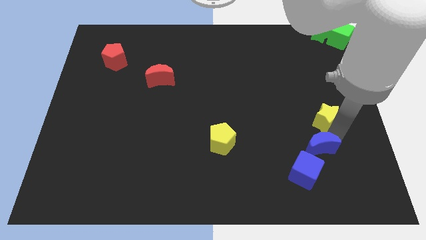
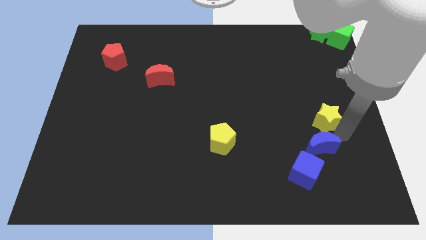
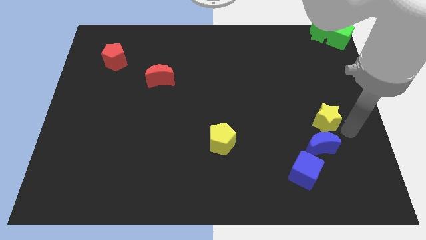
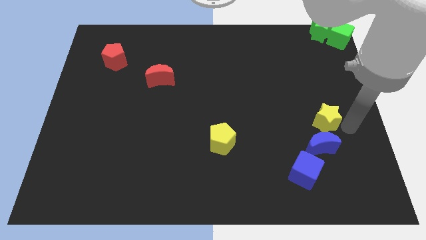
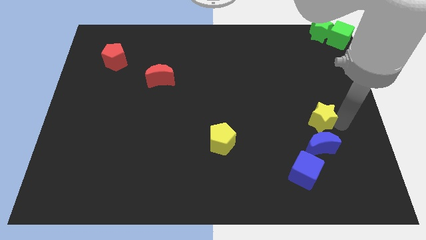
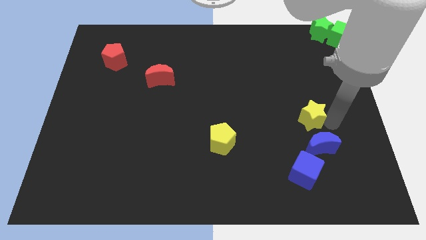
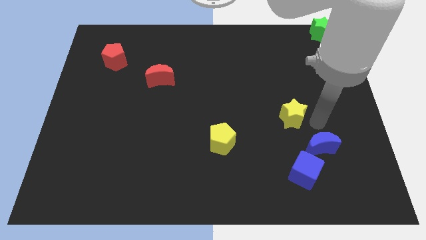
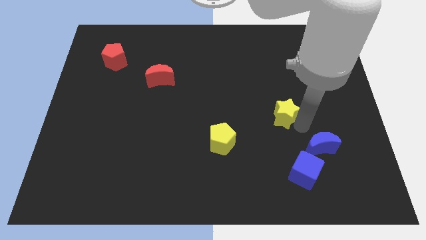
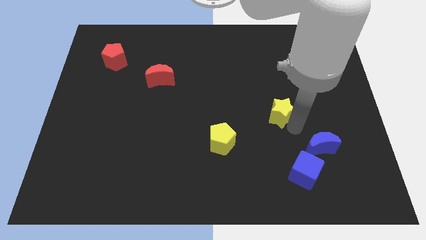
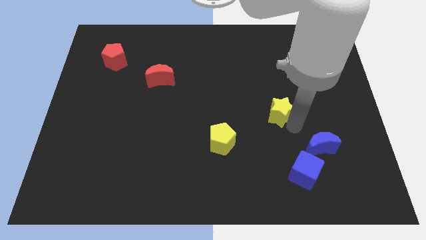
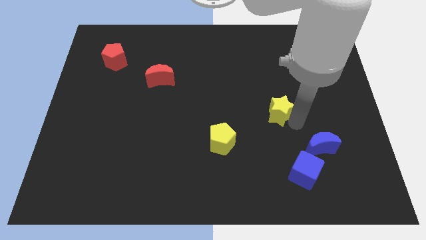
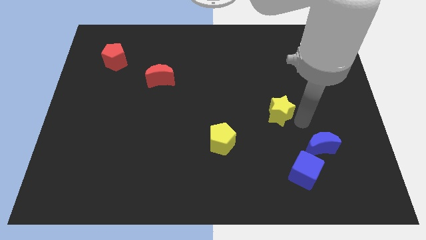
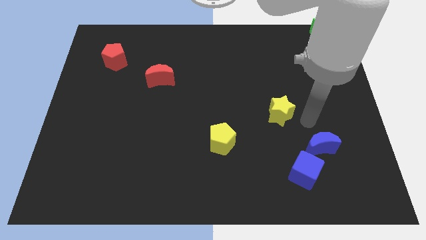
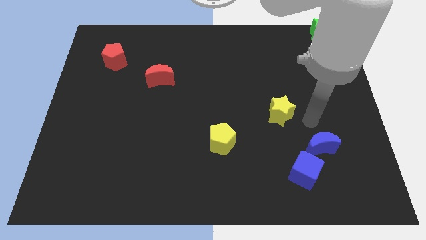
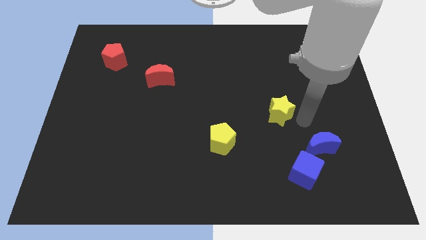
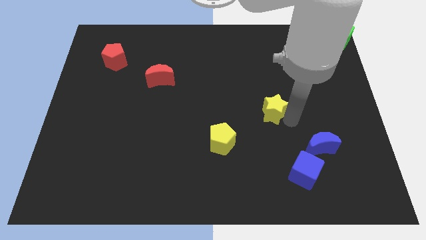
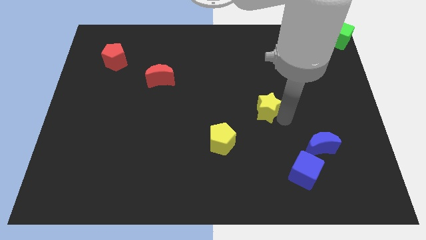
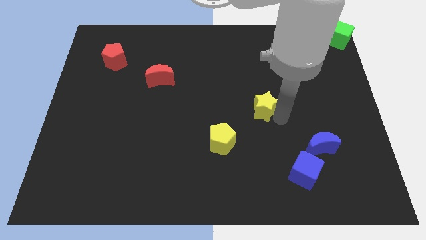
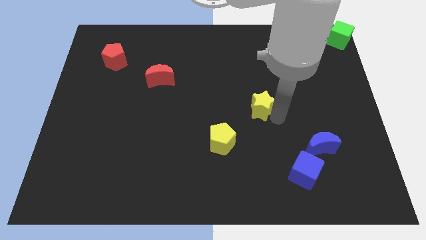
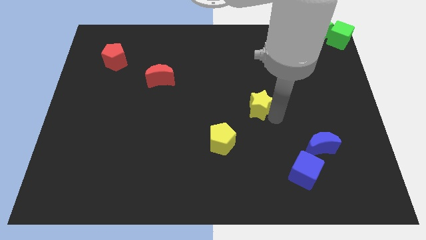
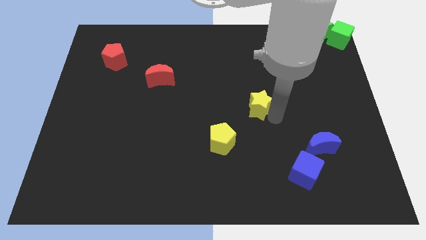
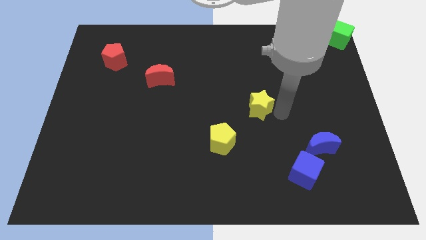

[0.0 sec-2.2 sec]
place the yellow star diagonally top right to the yellow pentagon

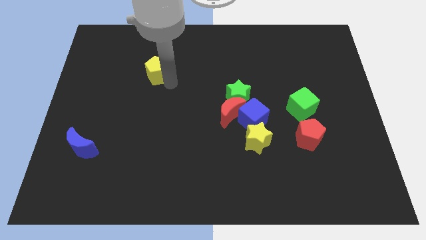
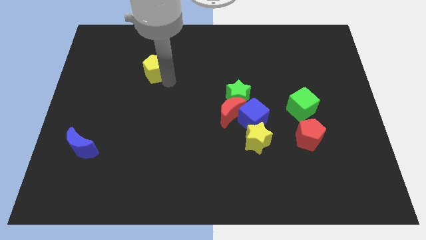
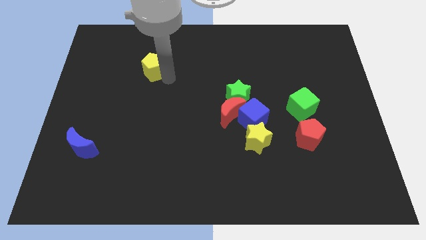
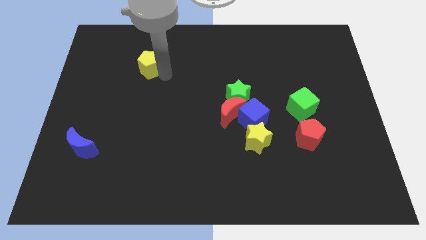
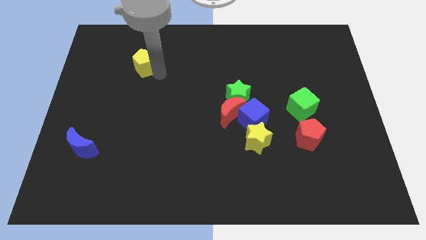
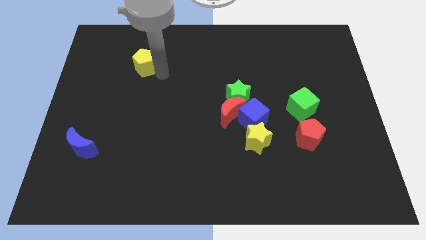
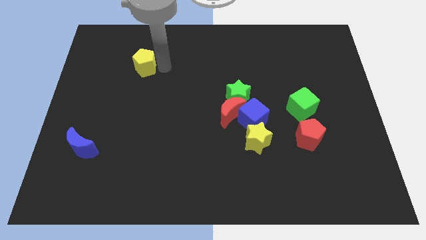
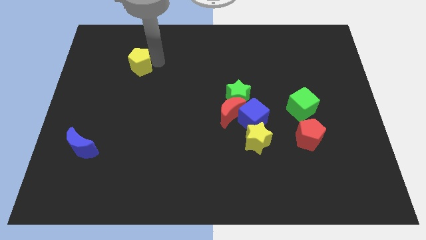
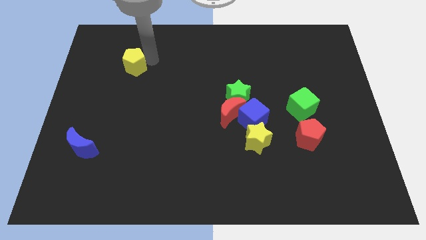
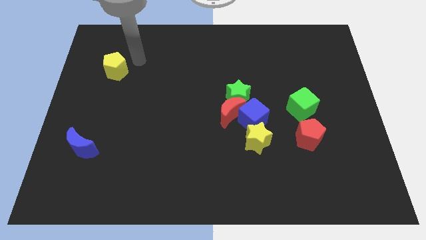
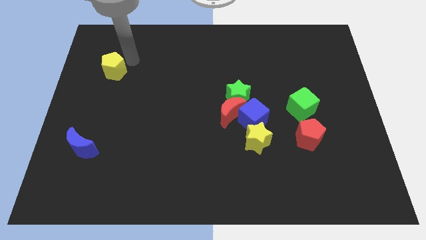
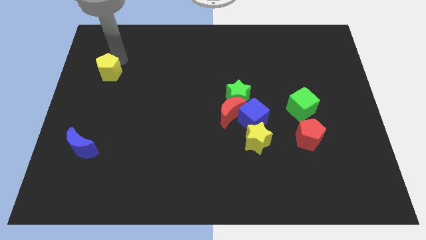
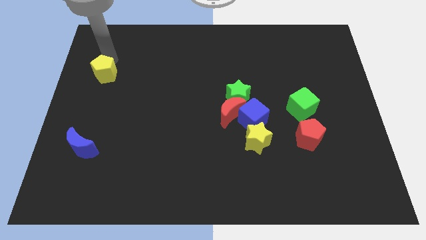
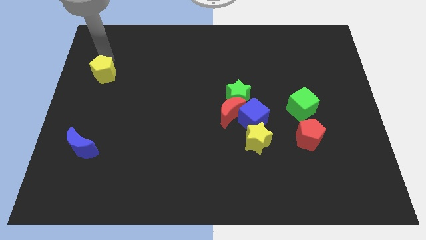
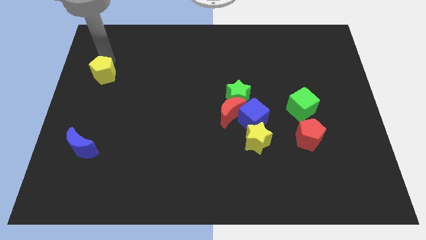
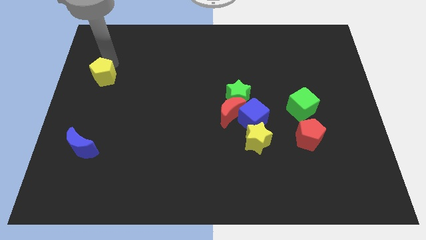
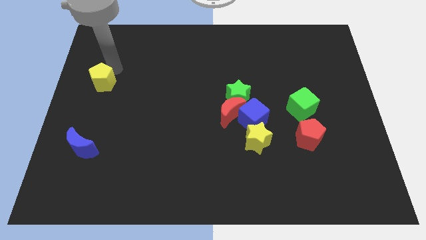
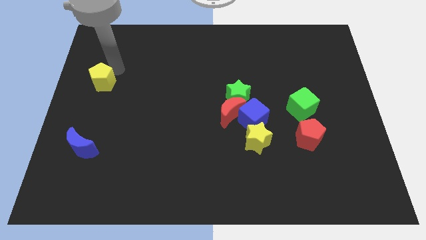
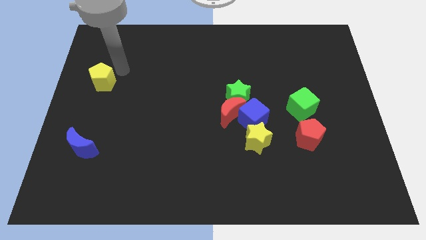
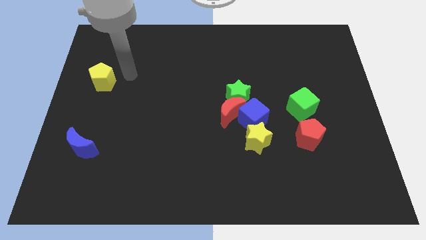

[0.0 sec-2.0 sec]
drag the yellow pentagon to the left side of the board

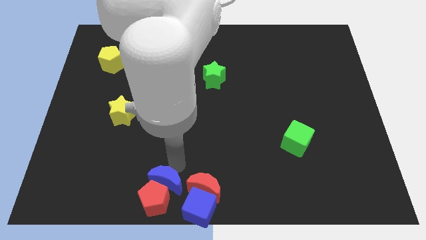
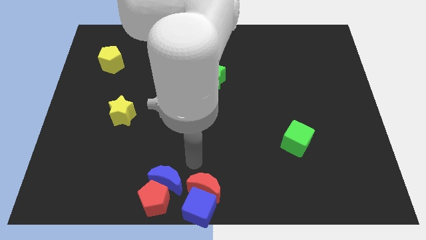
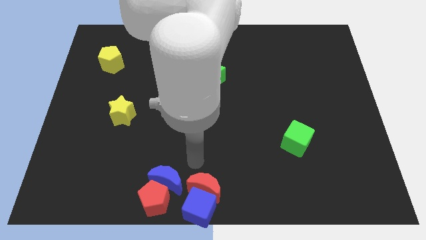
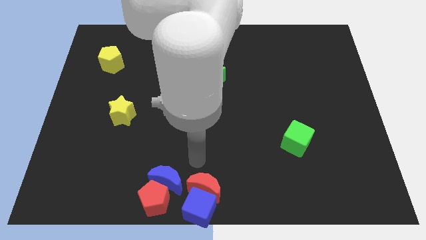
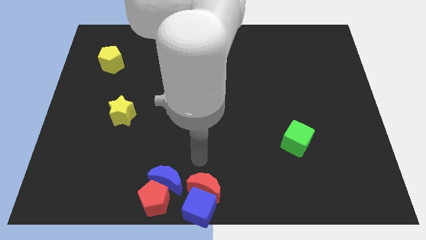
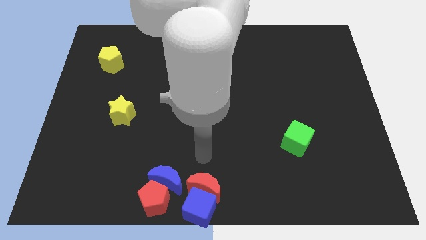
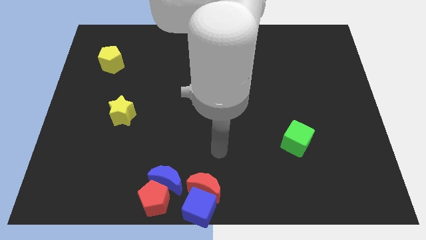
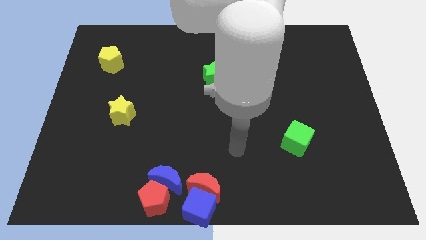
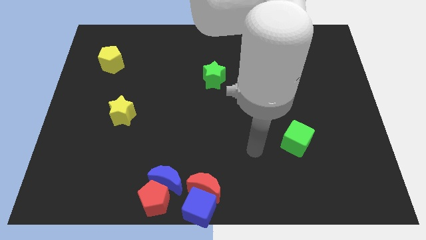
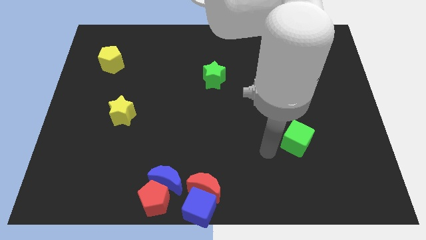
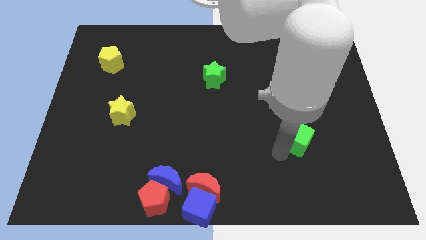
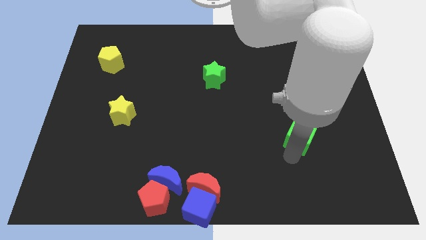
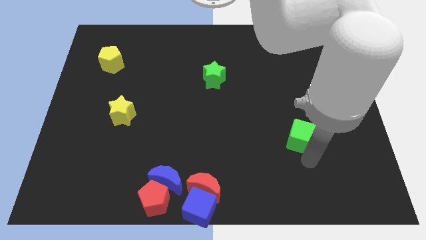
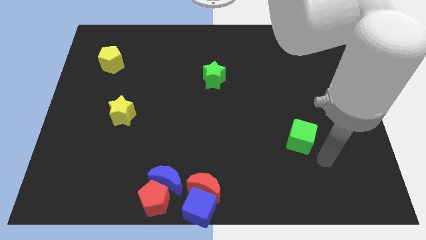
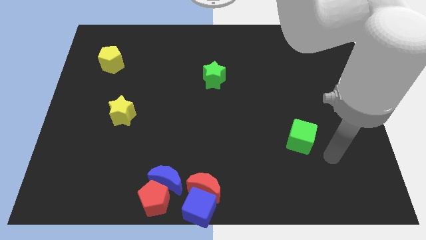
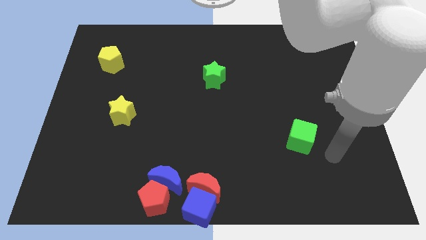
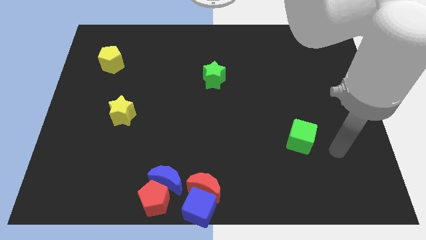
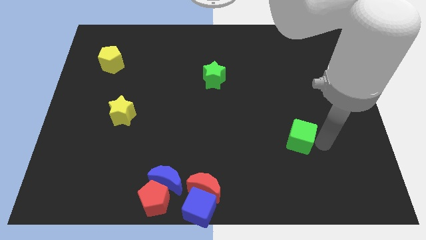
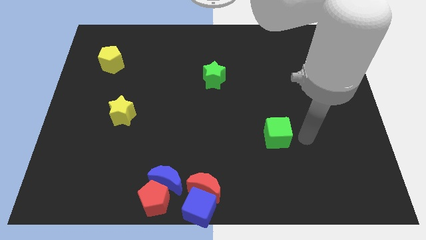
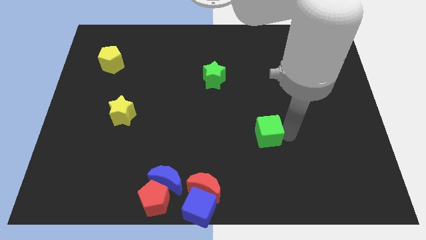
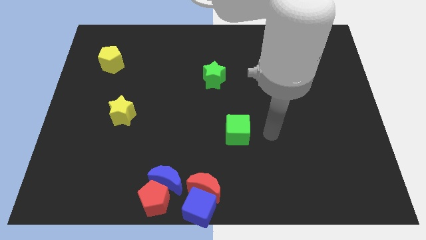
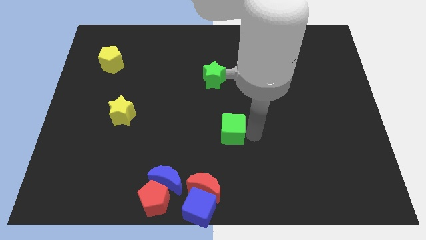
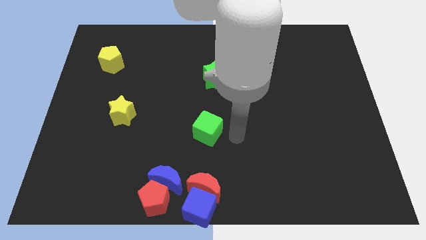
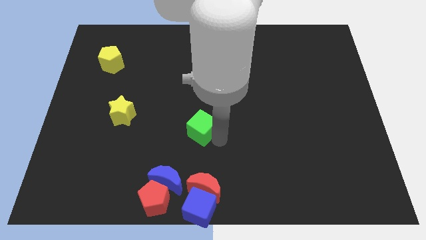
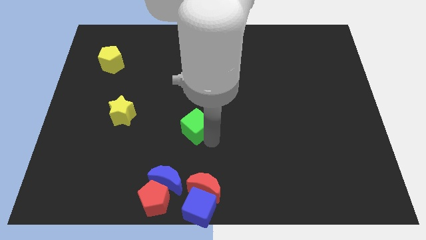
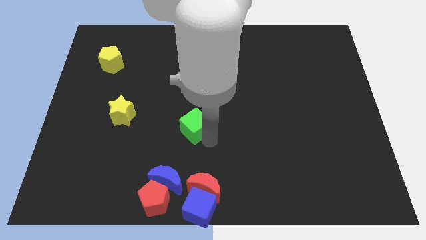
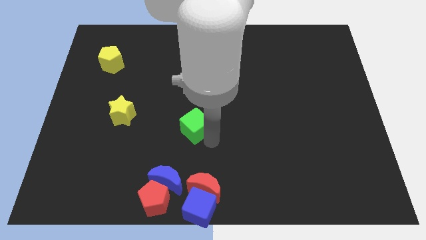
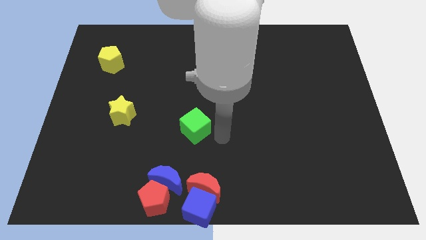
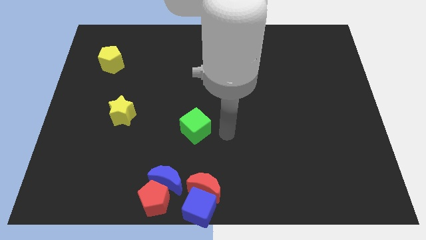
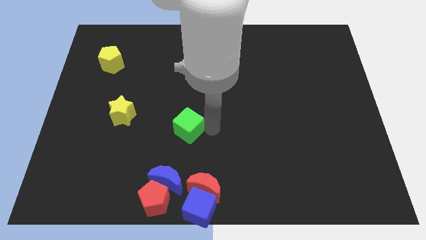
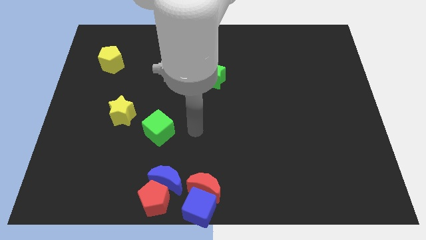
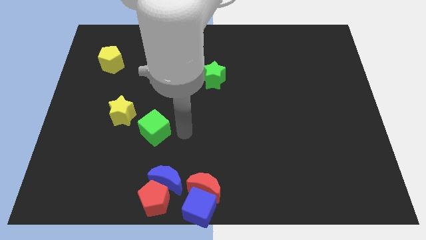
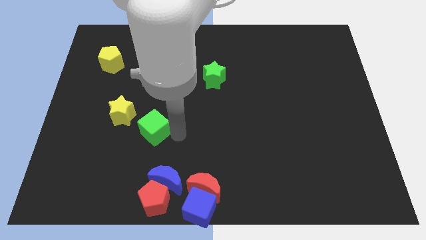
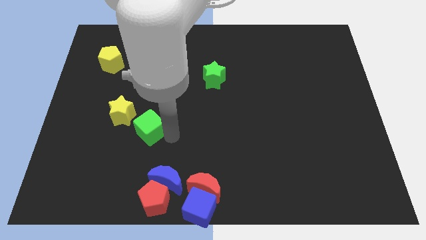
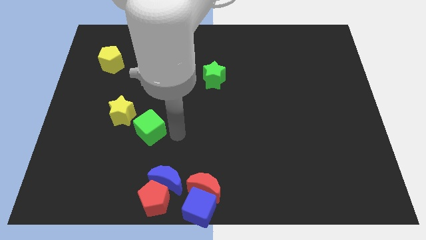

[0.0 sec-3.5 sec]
move the green cube near the yellow star

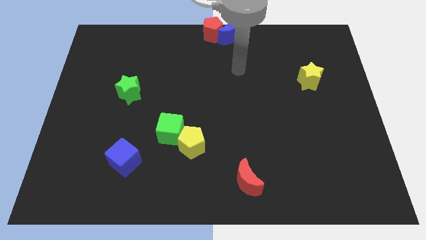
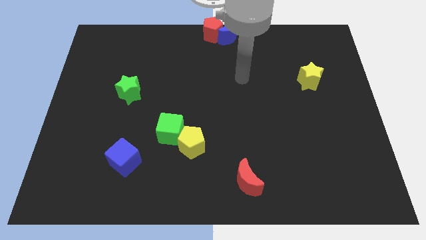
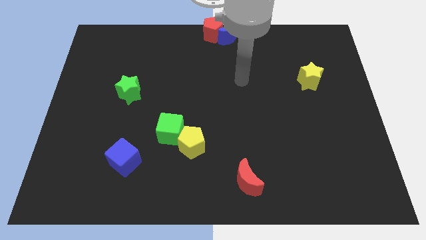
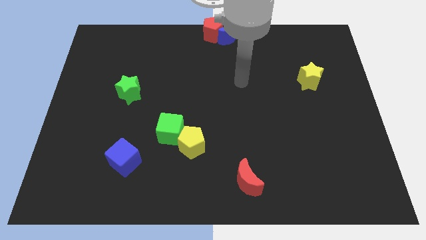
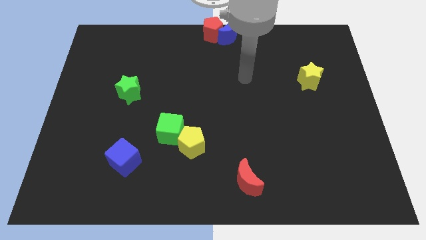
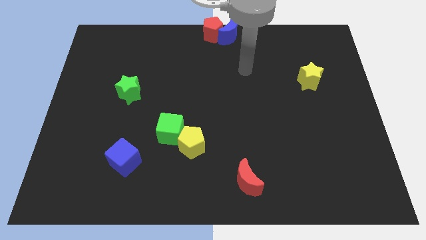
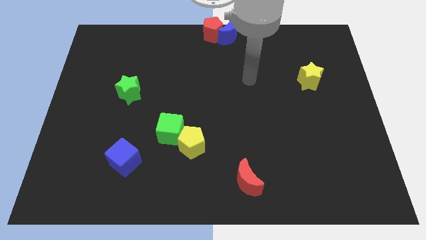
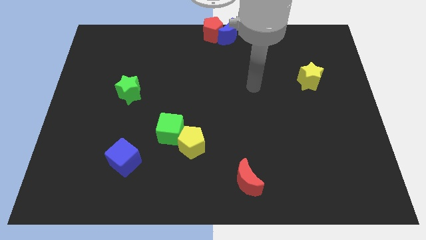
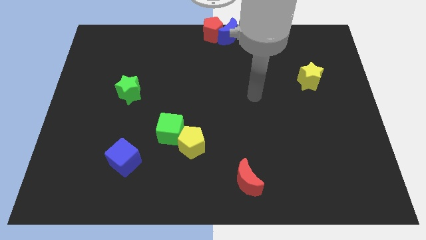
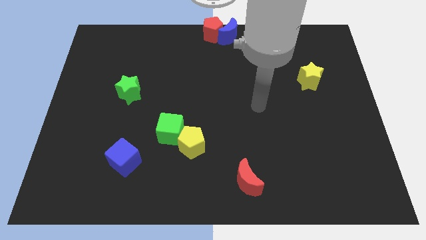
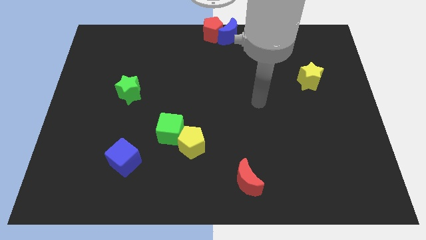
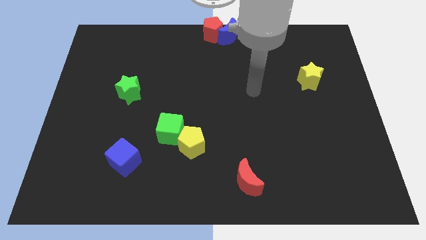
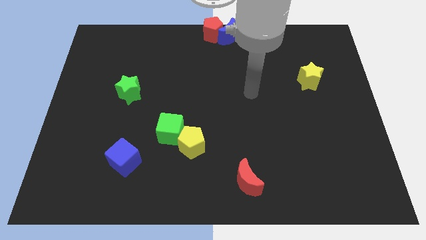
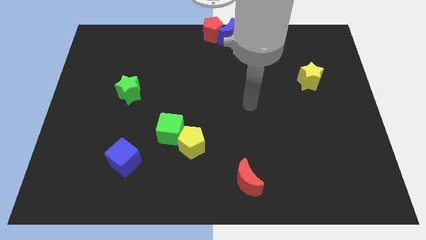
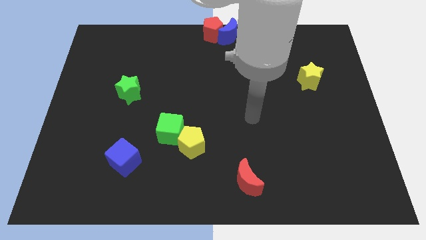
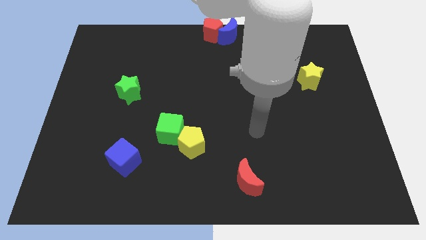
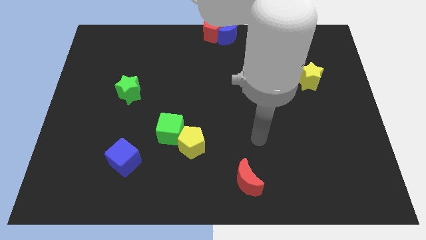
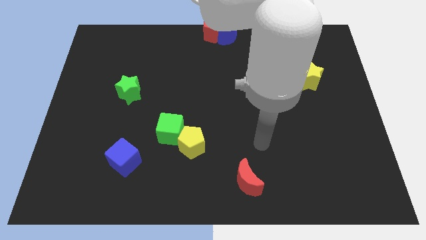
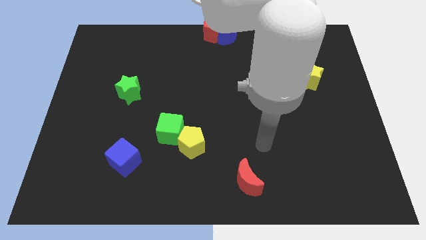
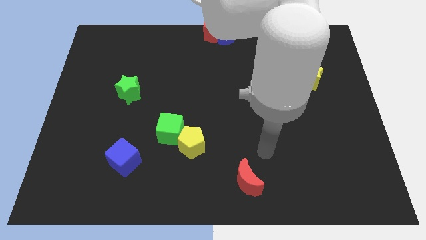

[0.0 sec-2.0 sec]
move the arm towards the red moon
